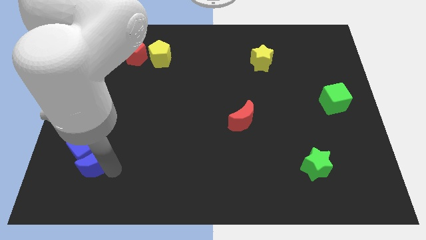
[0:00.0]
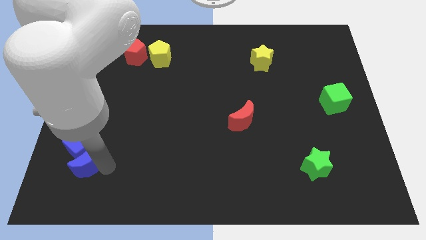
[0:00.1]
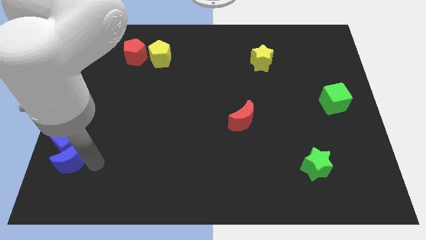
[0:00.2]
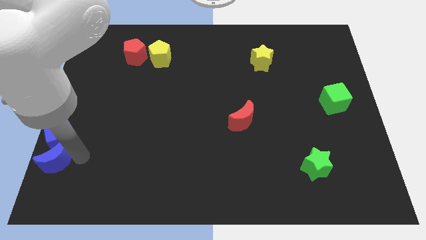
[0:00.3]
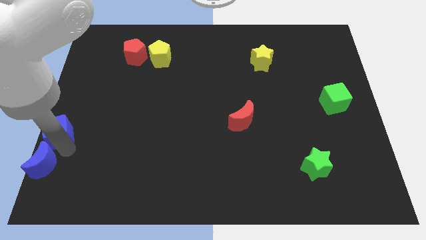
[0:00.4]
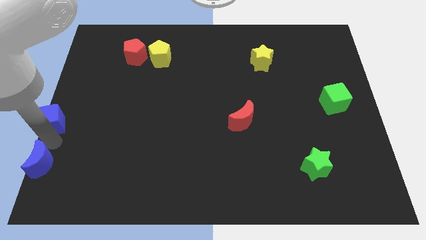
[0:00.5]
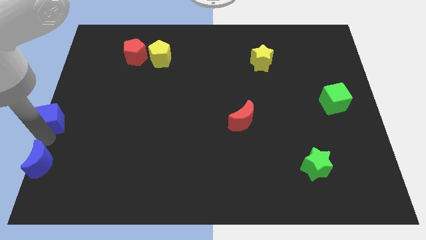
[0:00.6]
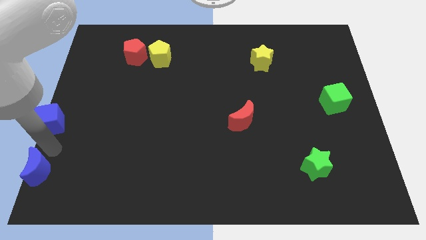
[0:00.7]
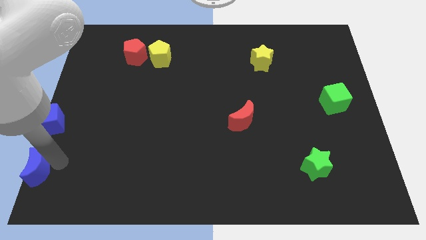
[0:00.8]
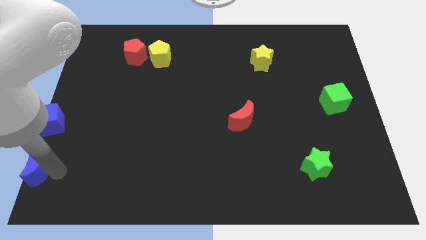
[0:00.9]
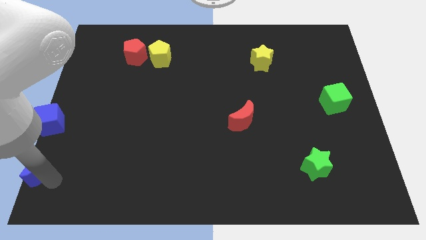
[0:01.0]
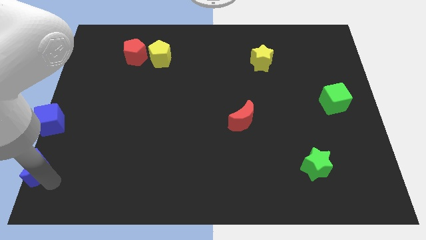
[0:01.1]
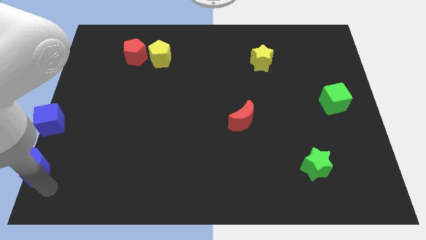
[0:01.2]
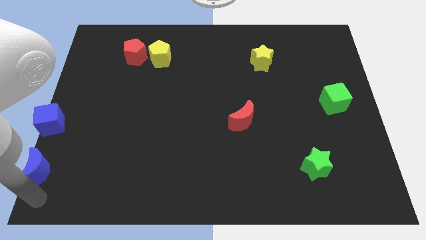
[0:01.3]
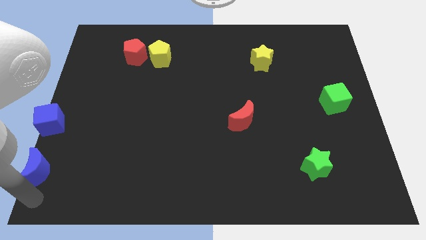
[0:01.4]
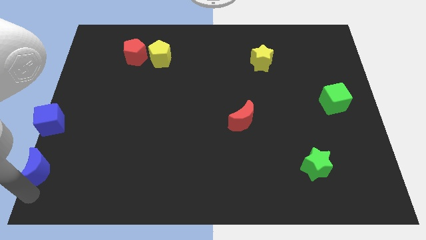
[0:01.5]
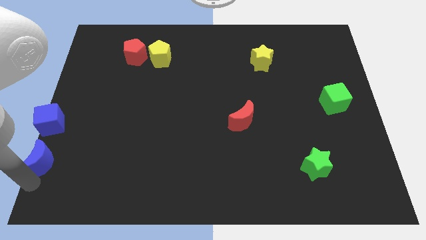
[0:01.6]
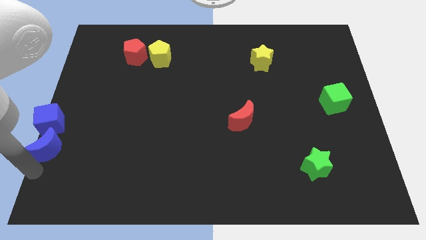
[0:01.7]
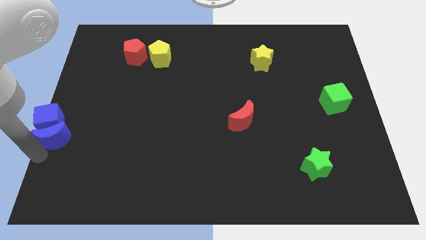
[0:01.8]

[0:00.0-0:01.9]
move the blue cube to the center left

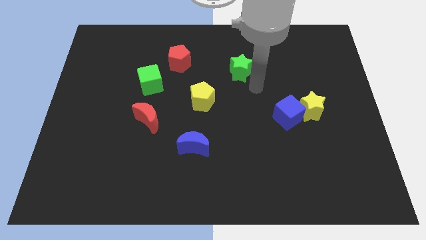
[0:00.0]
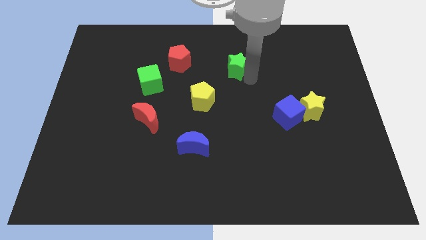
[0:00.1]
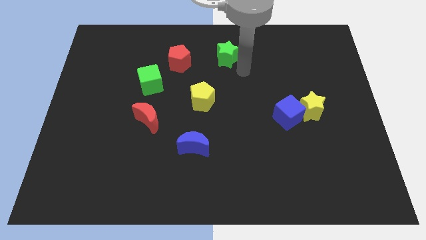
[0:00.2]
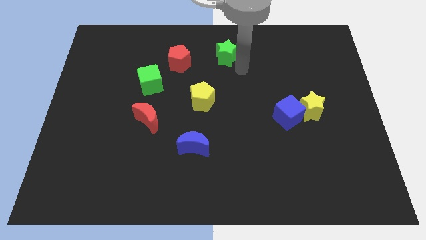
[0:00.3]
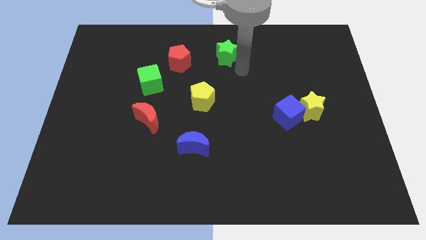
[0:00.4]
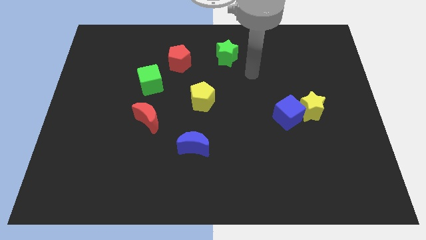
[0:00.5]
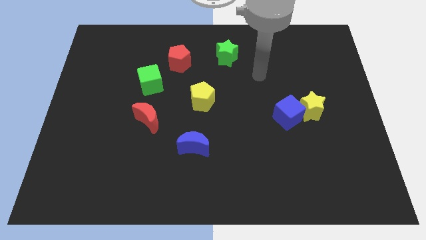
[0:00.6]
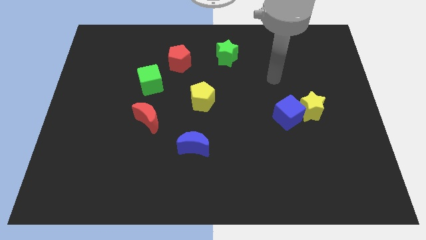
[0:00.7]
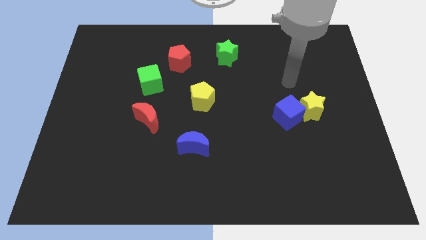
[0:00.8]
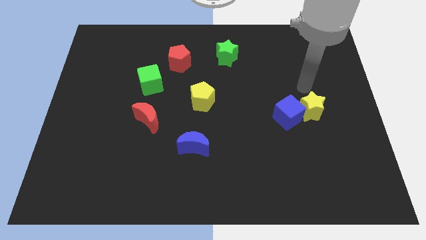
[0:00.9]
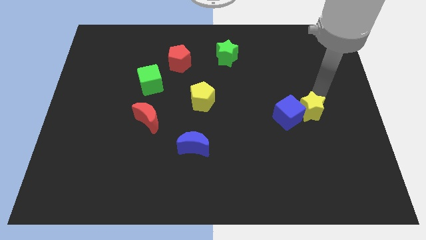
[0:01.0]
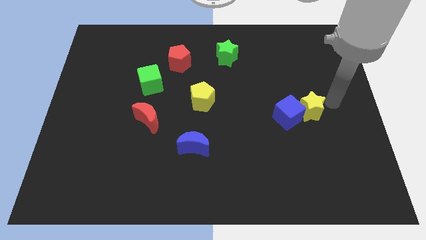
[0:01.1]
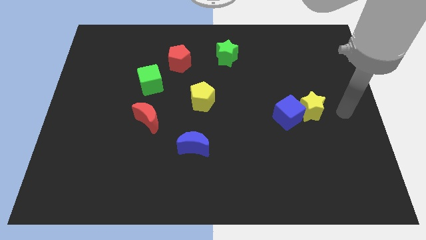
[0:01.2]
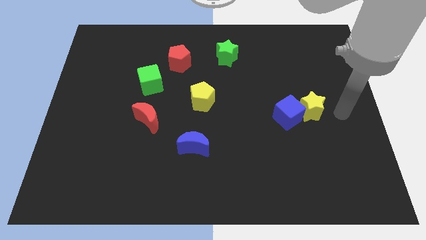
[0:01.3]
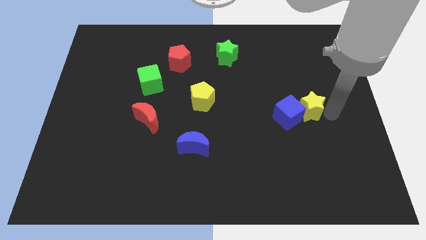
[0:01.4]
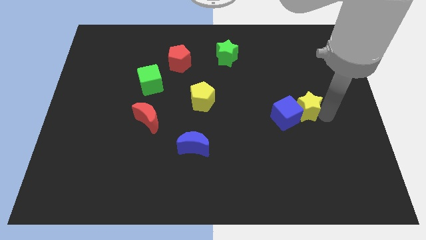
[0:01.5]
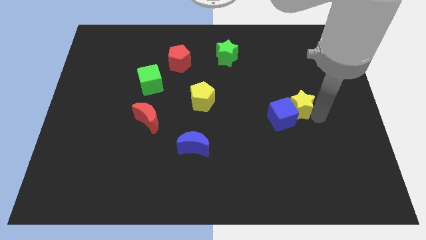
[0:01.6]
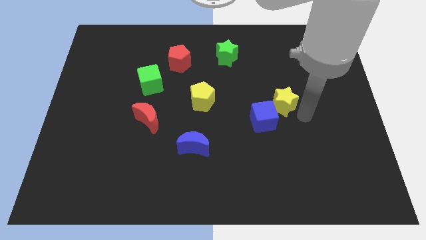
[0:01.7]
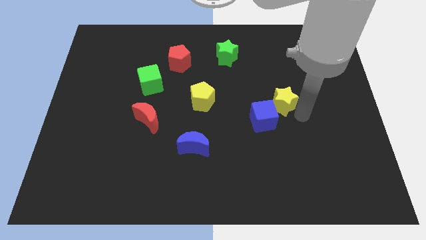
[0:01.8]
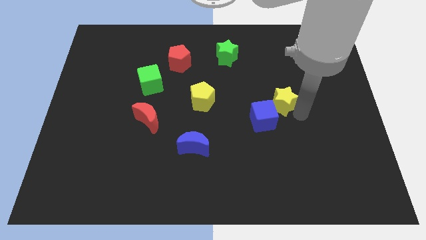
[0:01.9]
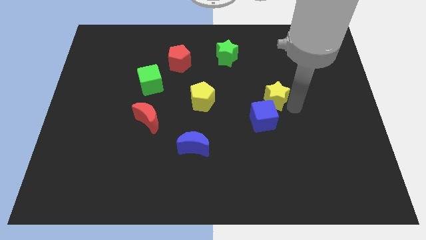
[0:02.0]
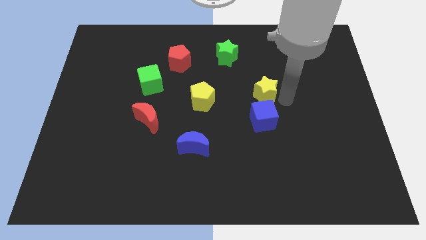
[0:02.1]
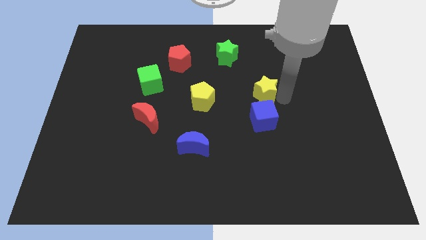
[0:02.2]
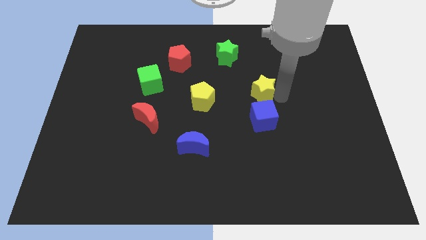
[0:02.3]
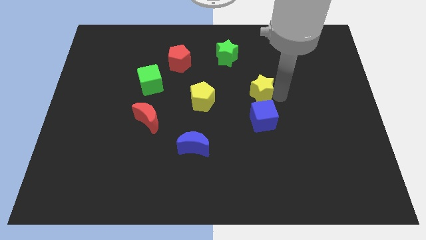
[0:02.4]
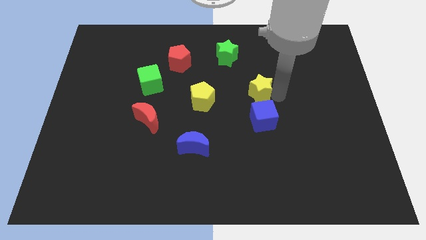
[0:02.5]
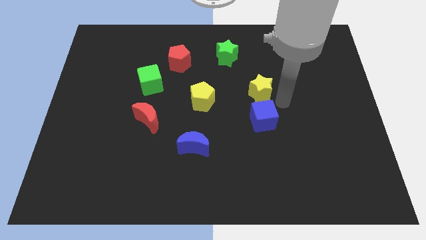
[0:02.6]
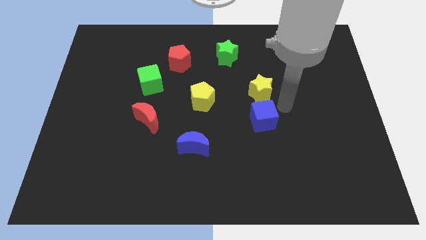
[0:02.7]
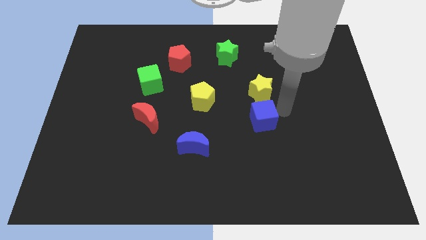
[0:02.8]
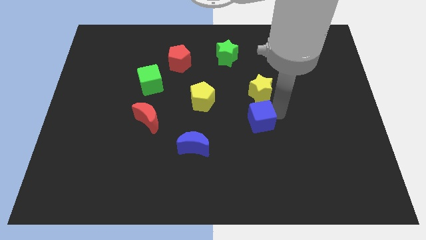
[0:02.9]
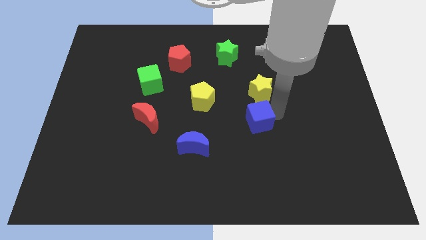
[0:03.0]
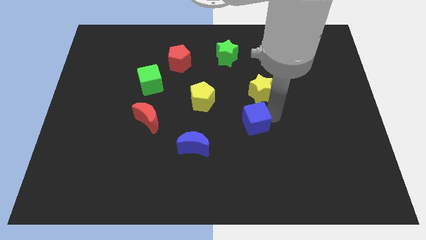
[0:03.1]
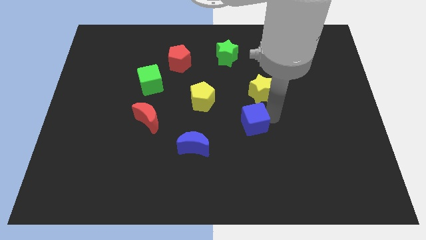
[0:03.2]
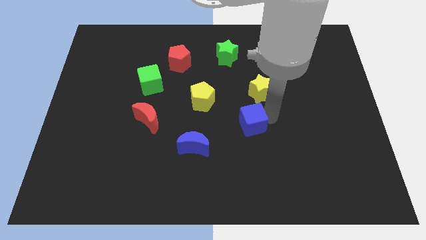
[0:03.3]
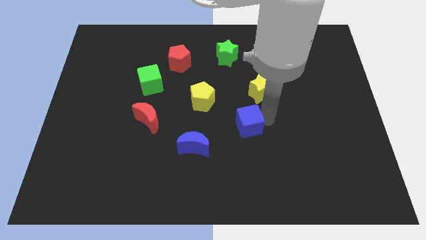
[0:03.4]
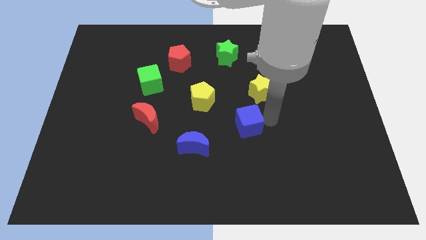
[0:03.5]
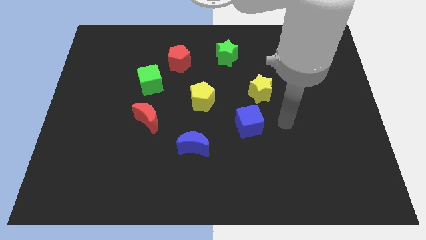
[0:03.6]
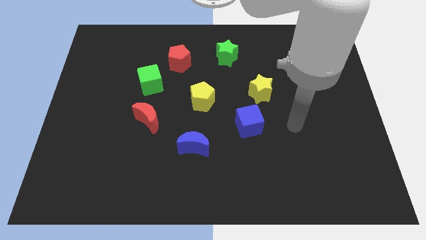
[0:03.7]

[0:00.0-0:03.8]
separate the yellow star and blue cube

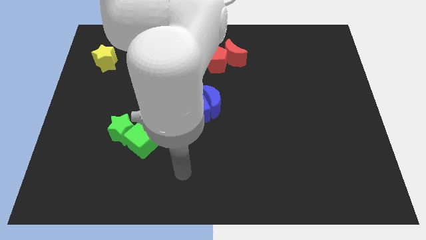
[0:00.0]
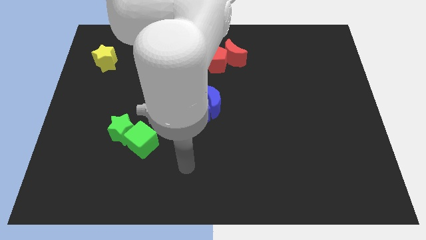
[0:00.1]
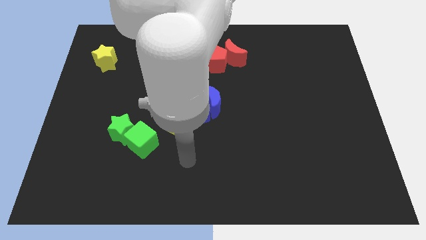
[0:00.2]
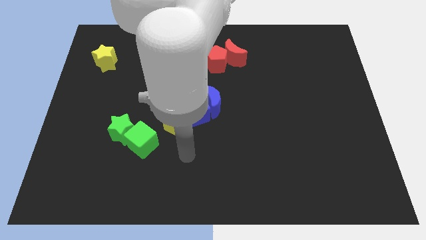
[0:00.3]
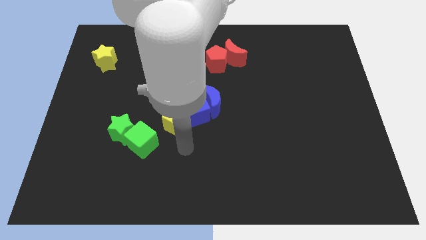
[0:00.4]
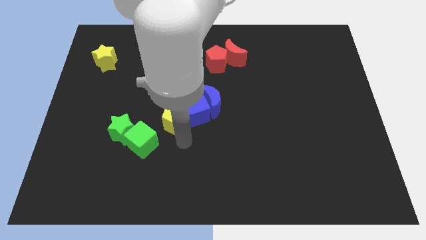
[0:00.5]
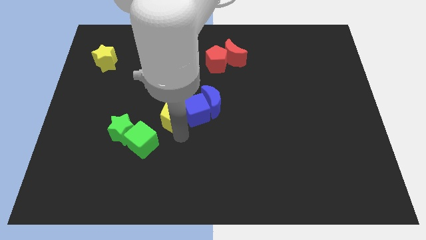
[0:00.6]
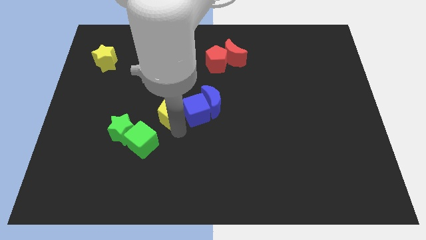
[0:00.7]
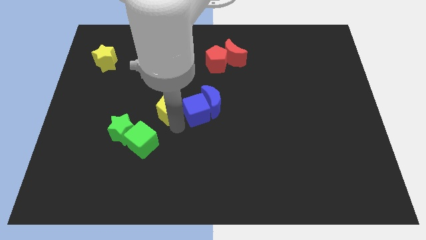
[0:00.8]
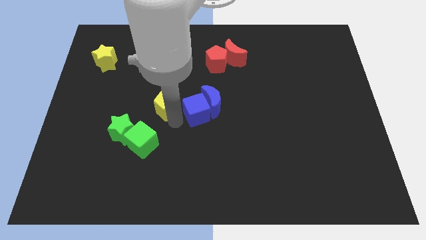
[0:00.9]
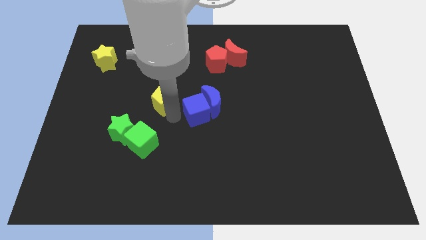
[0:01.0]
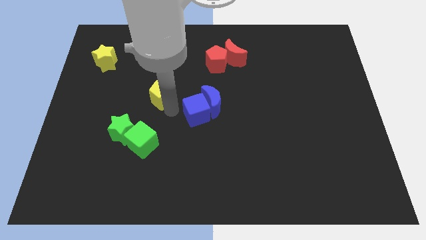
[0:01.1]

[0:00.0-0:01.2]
slightly push the yellow pentagon diagonal to the yellow star

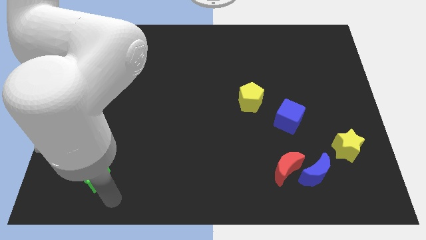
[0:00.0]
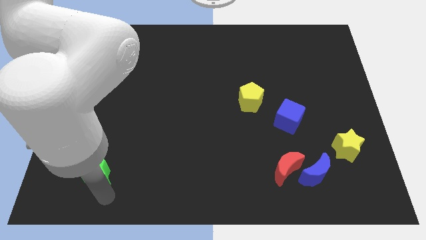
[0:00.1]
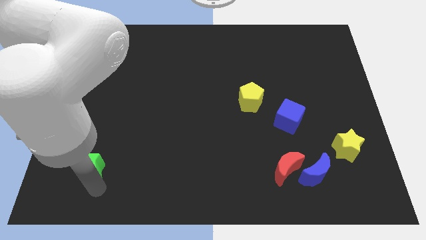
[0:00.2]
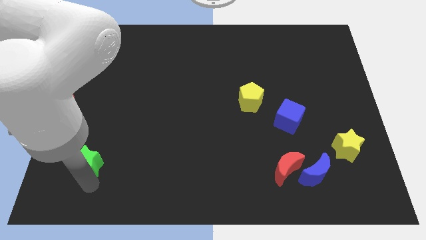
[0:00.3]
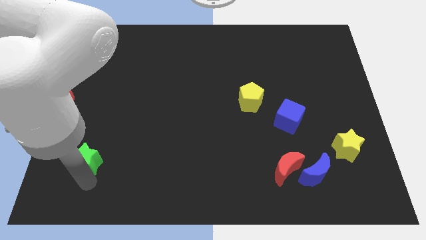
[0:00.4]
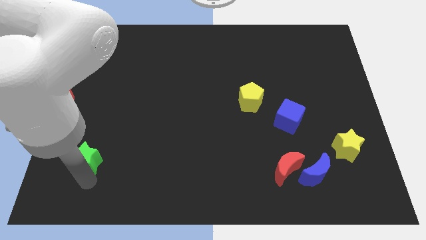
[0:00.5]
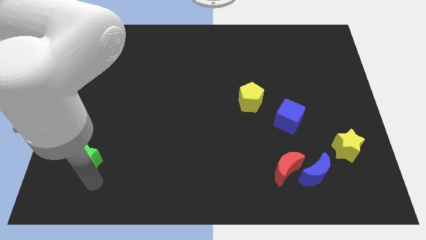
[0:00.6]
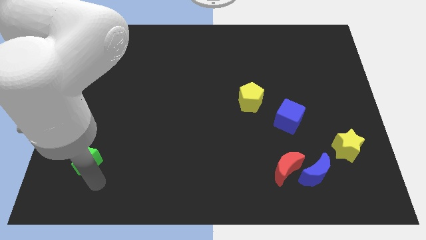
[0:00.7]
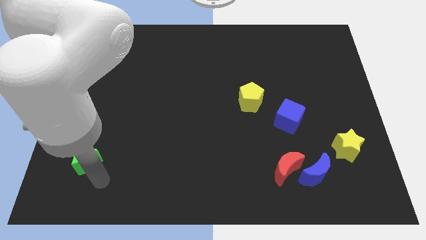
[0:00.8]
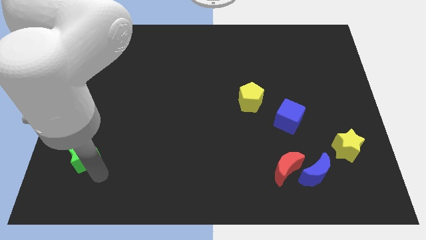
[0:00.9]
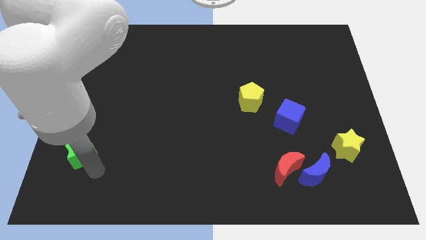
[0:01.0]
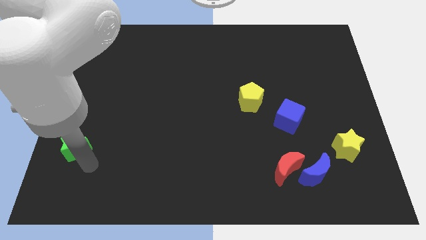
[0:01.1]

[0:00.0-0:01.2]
place the green star diagonal to the green cube

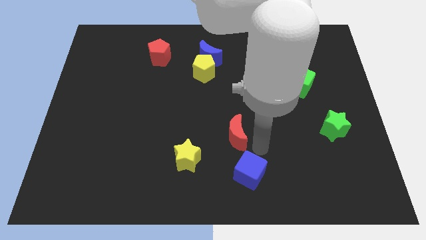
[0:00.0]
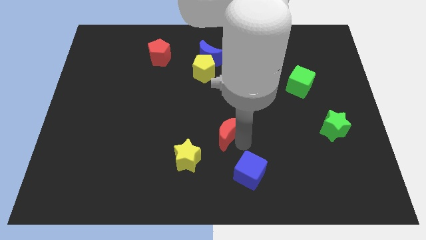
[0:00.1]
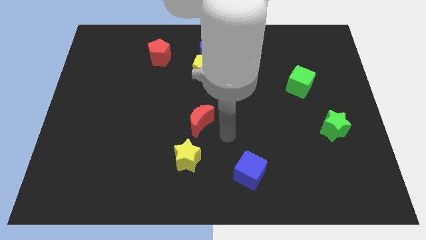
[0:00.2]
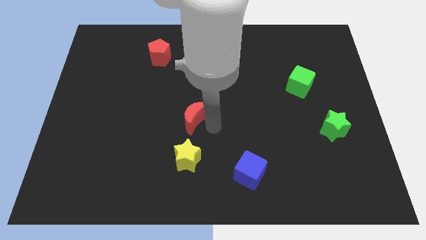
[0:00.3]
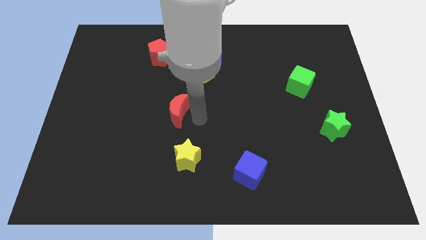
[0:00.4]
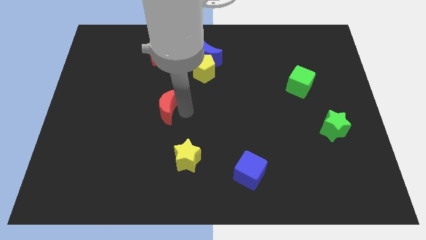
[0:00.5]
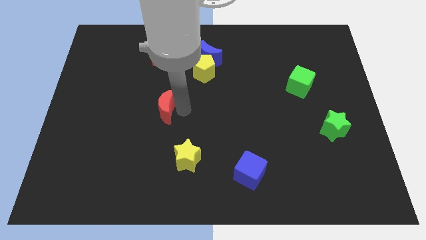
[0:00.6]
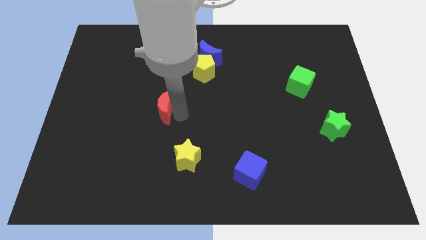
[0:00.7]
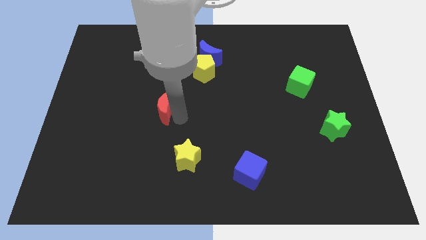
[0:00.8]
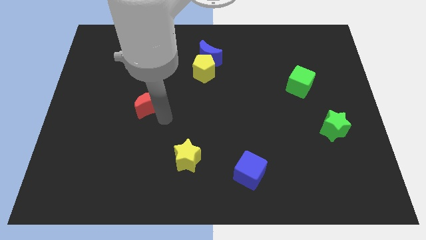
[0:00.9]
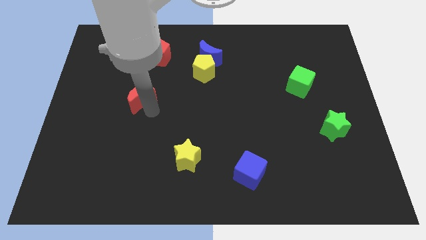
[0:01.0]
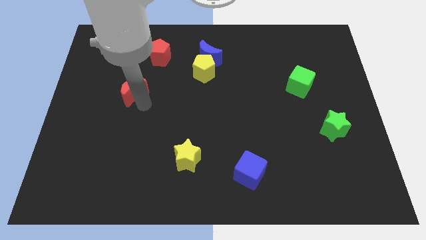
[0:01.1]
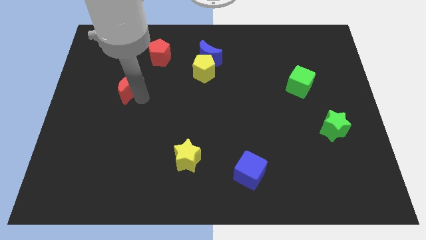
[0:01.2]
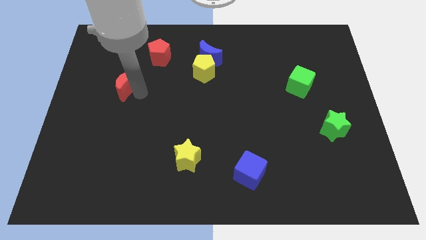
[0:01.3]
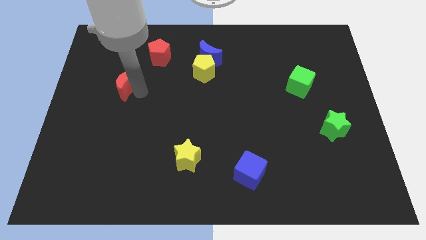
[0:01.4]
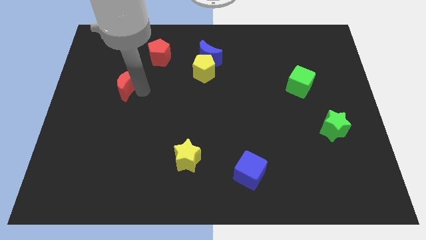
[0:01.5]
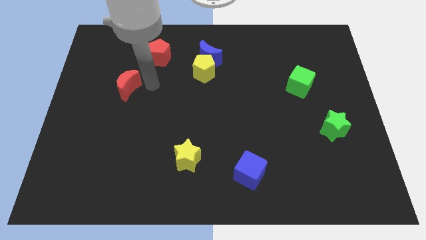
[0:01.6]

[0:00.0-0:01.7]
move red crescent diagonally to the bottom of the red pentagon
